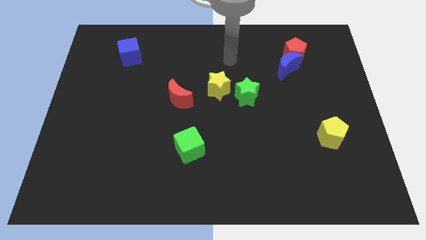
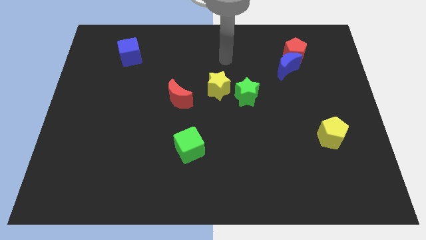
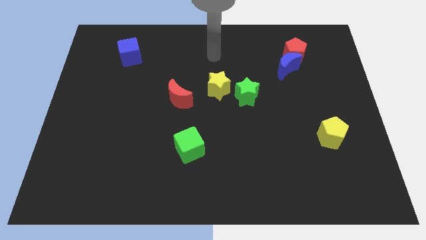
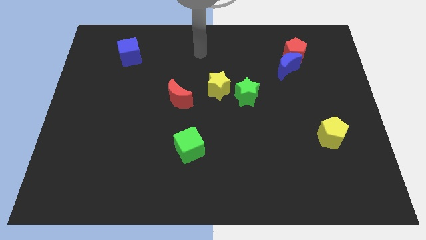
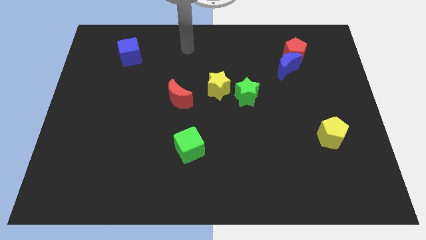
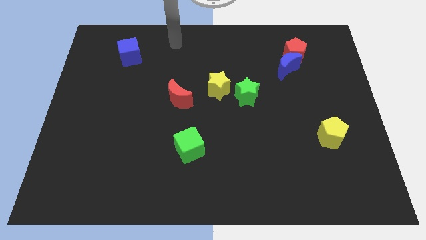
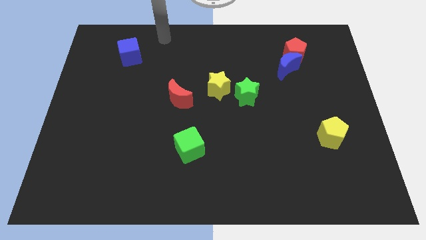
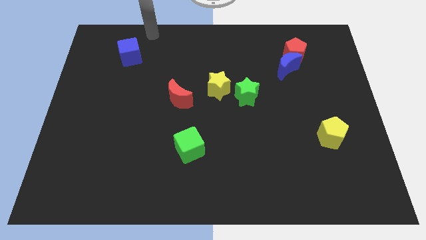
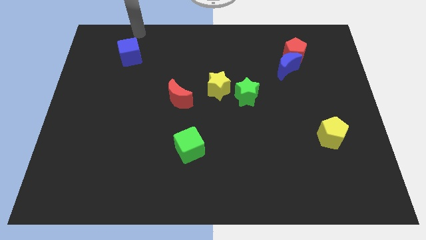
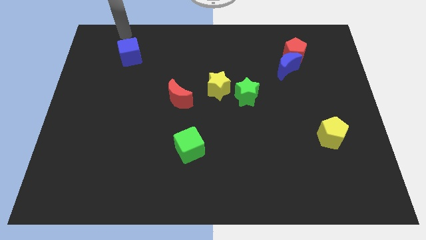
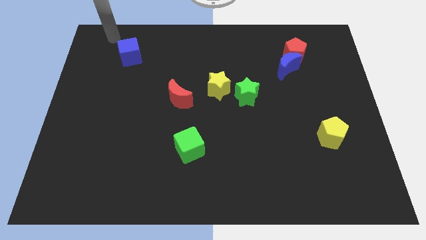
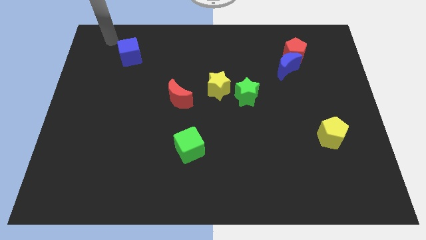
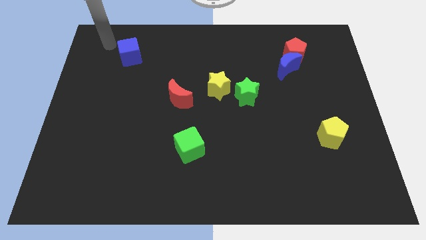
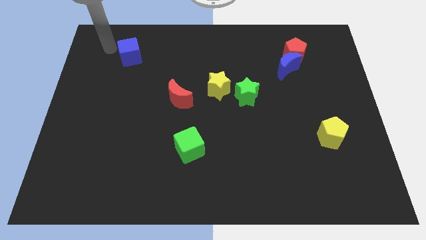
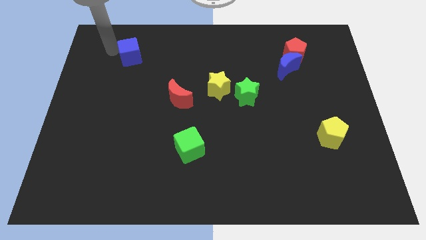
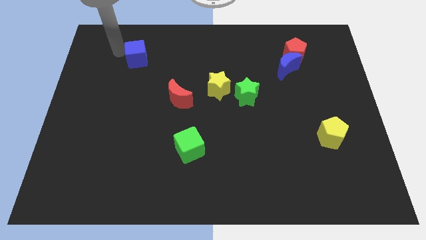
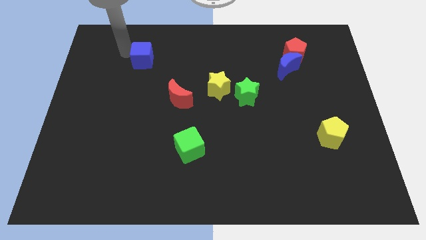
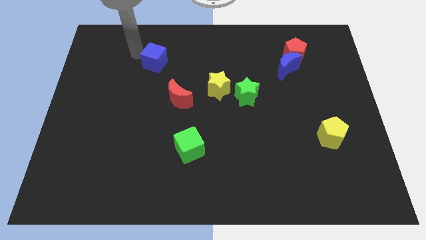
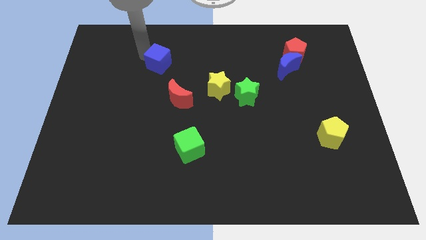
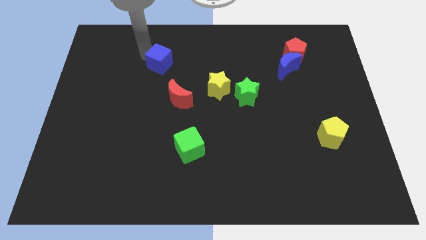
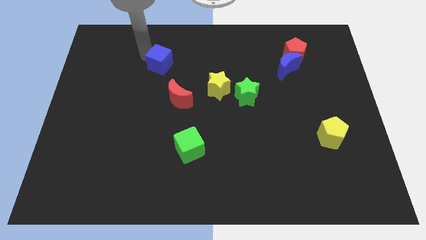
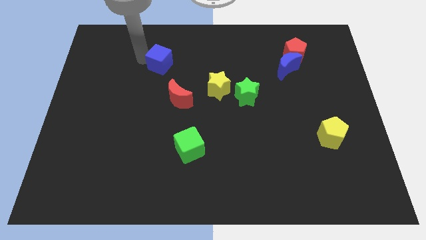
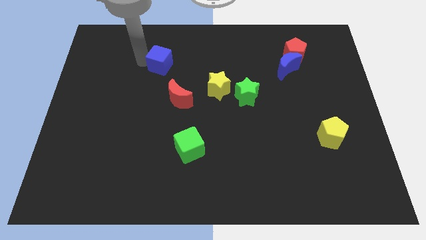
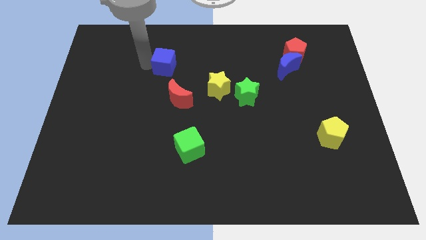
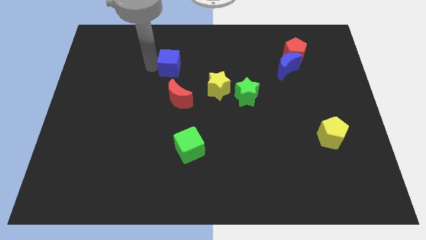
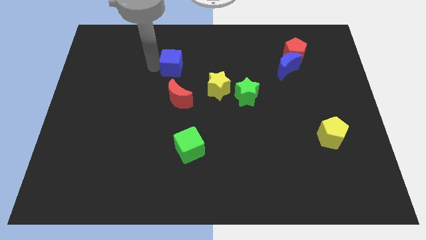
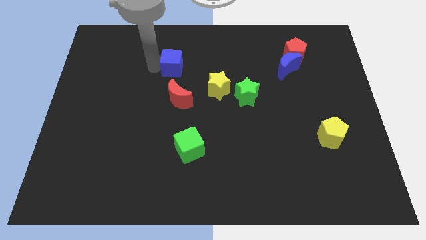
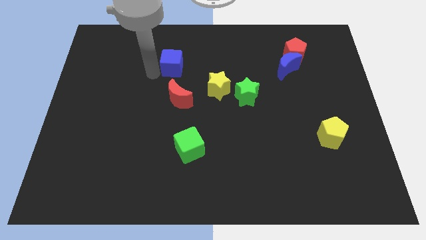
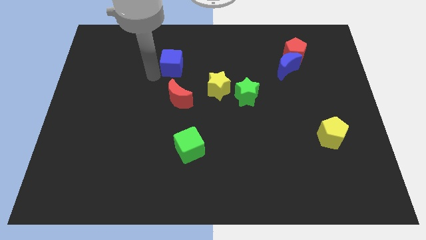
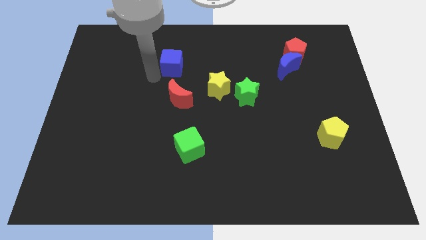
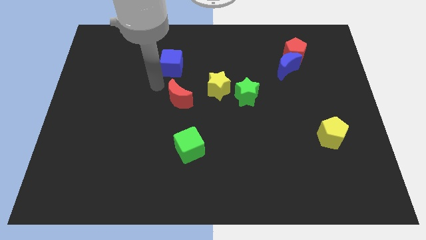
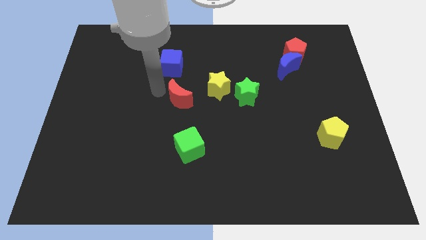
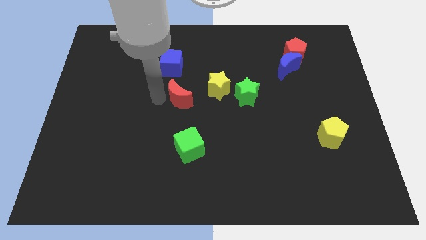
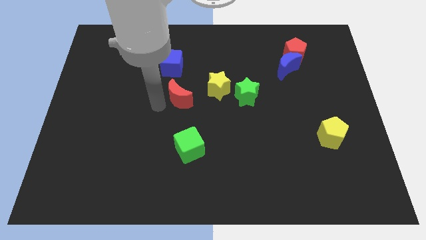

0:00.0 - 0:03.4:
place the blue cube above the red crescent

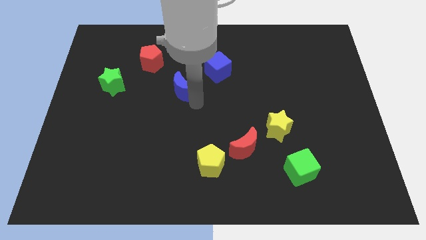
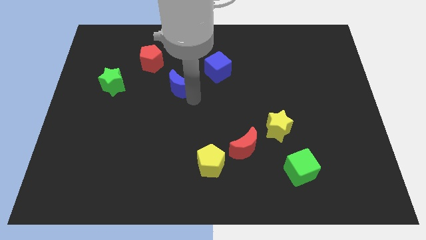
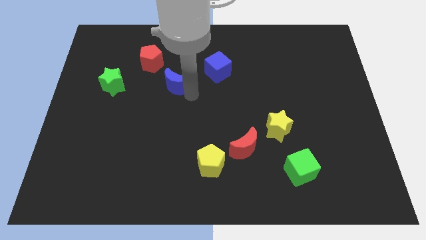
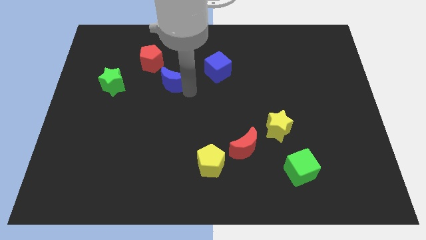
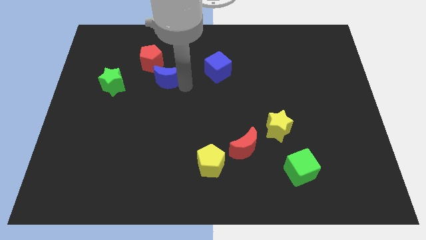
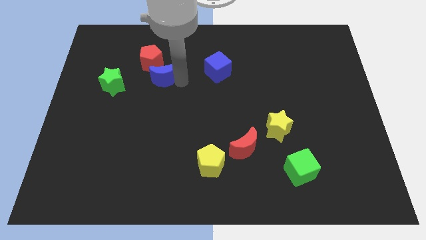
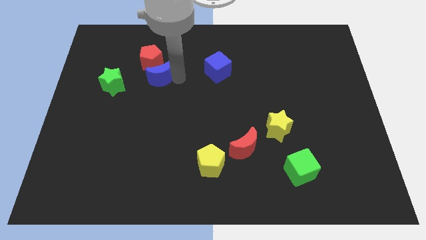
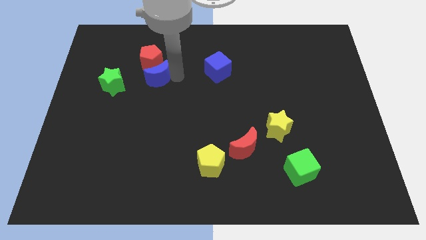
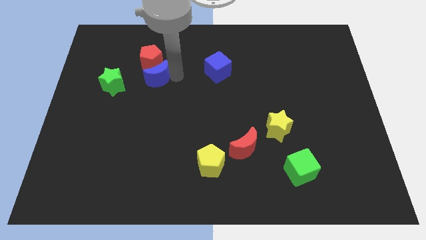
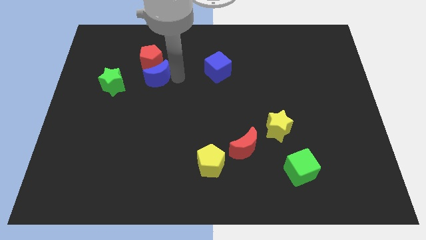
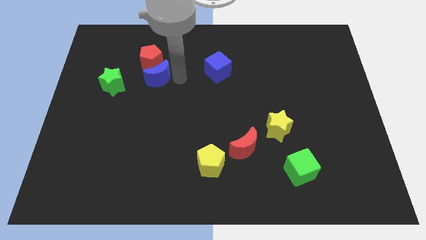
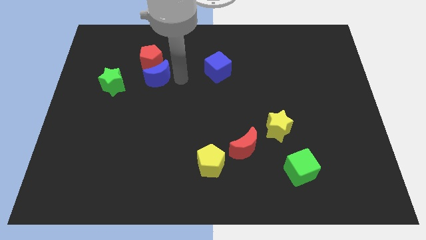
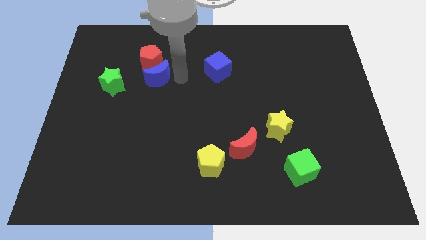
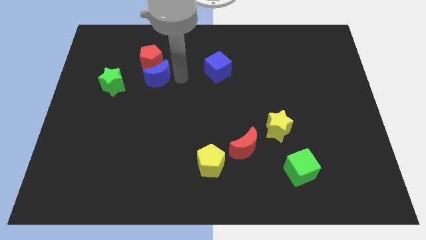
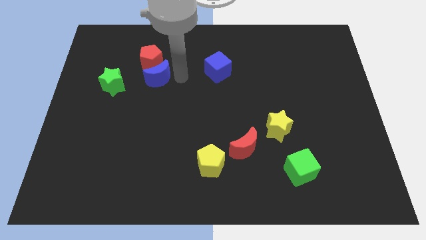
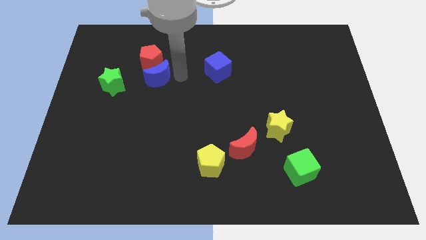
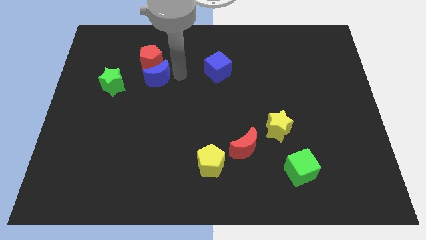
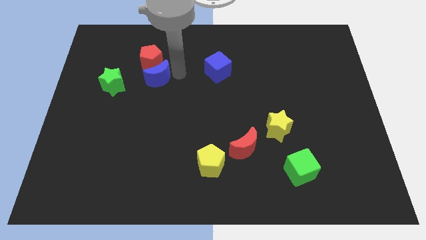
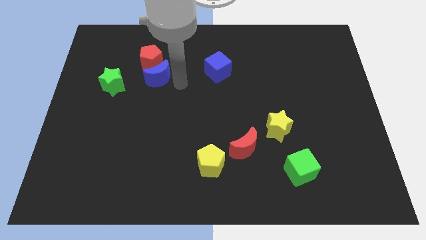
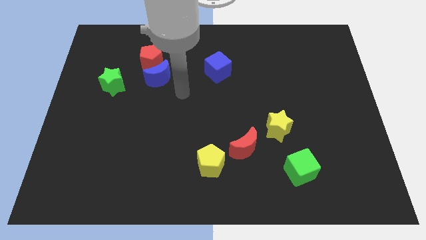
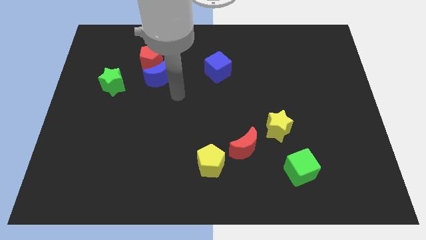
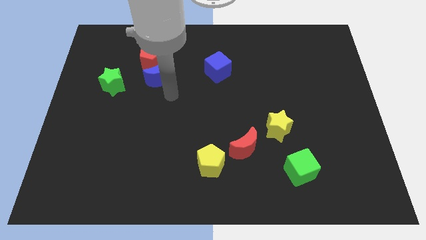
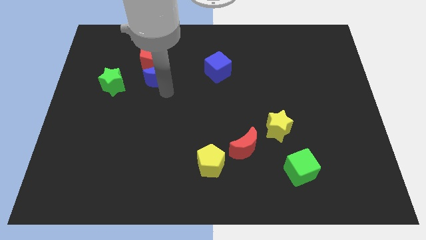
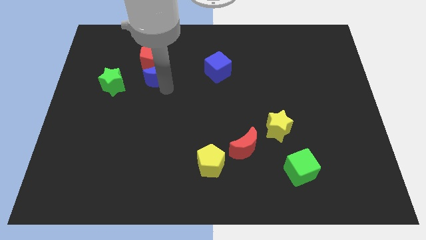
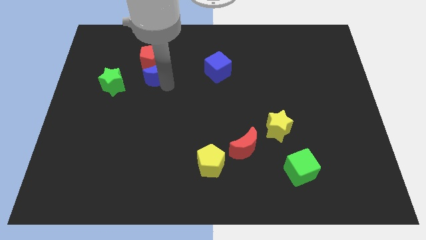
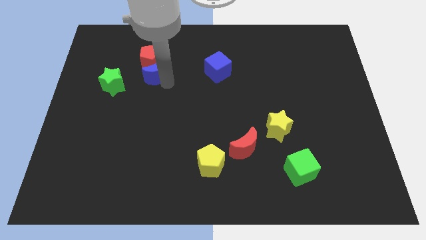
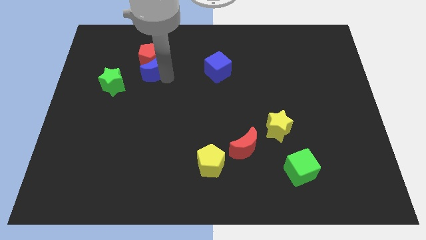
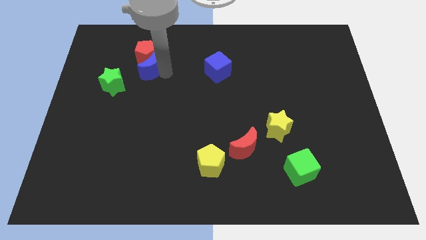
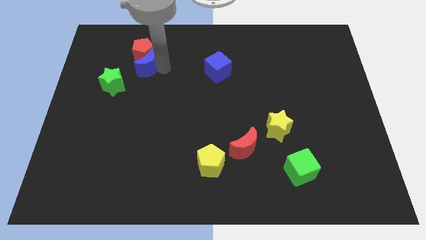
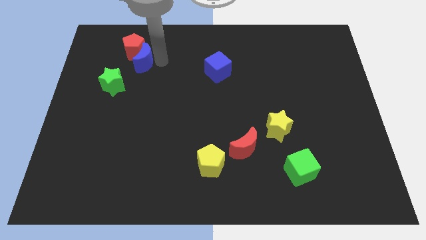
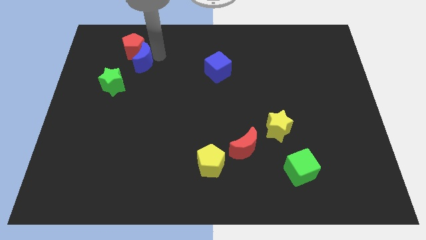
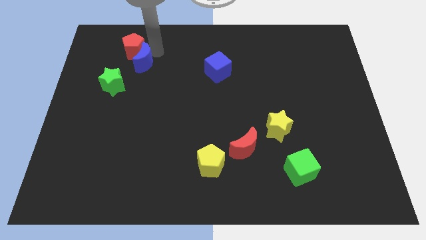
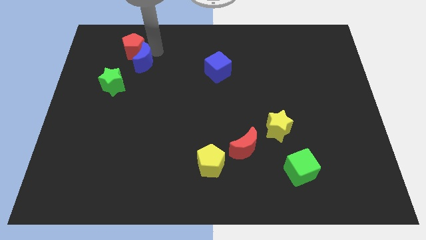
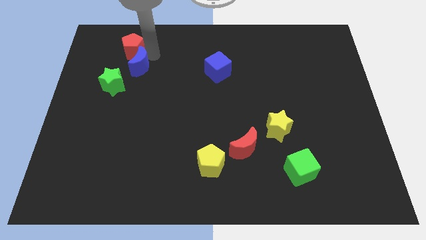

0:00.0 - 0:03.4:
push the blue moon into the red pentagon

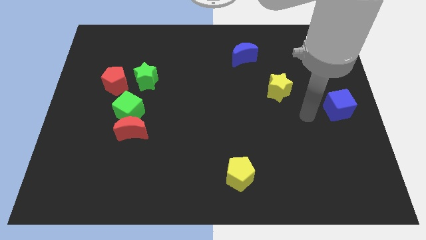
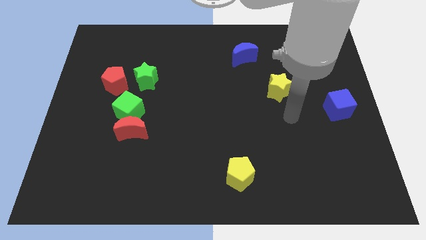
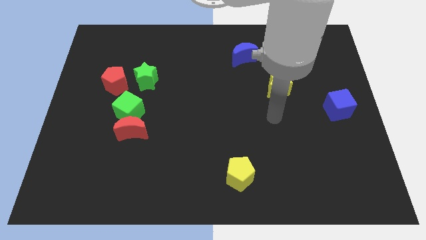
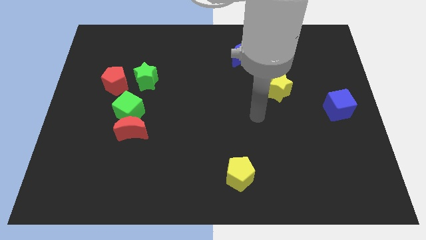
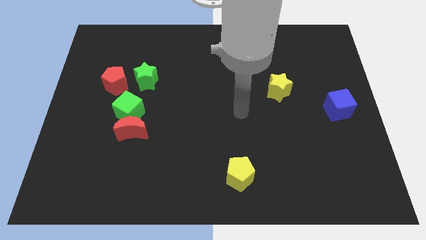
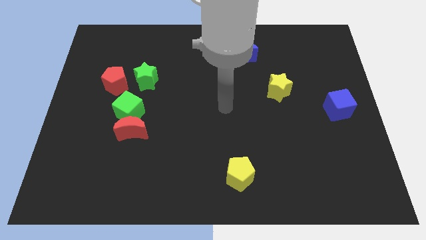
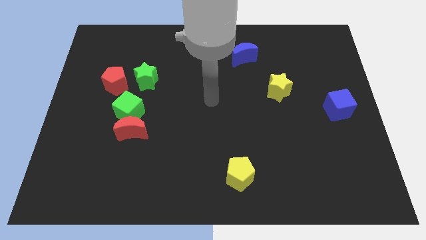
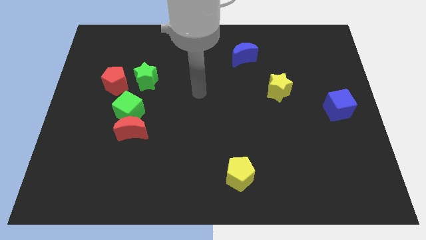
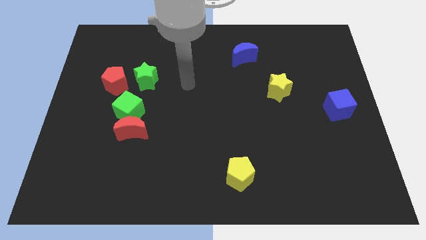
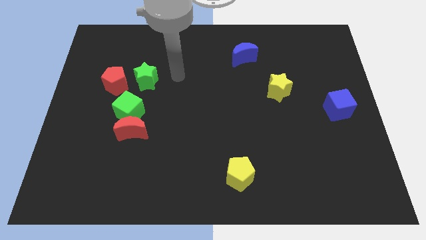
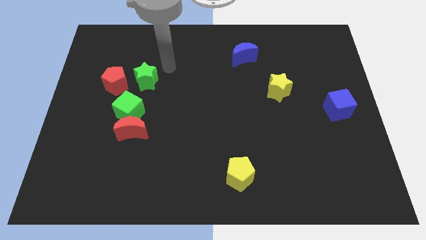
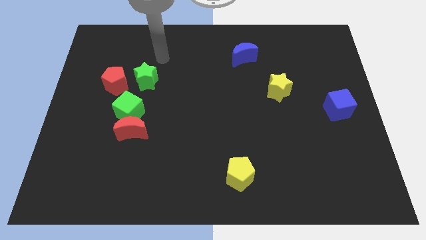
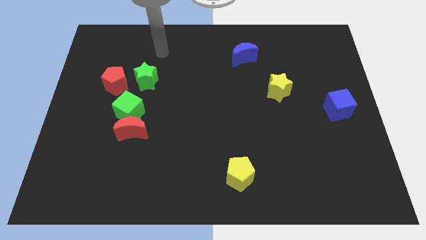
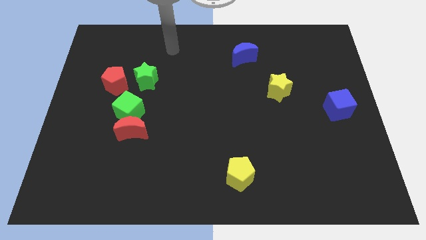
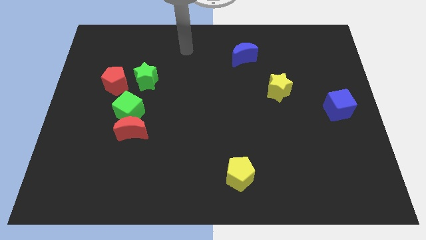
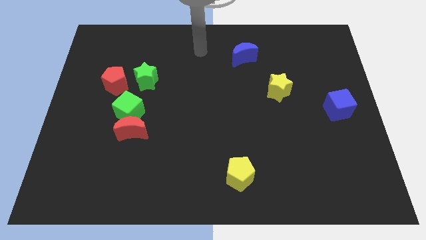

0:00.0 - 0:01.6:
move towards the top center of the board

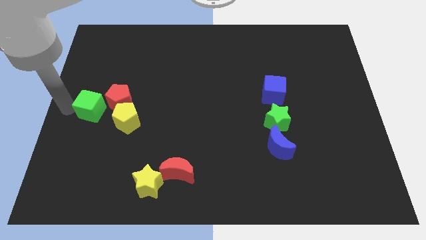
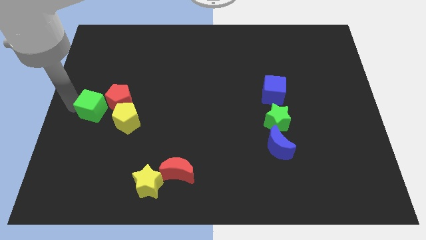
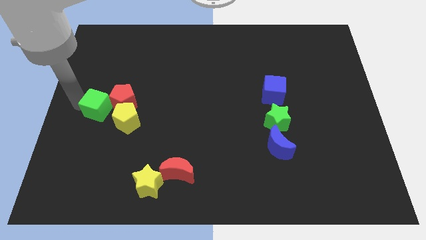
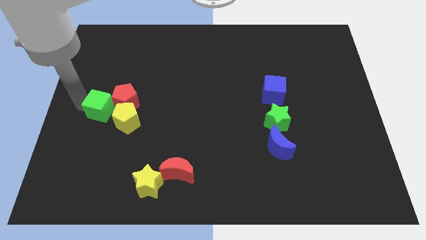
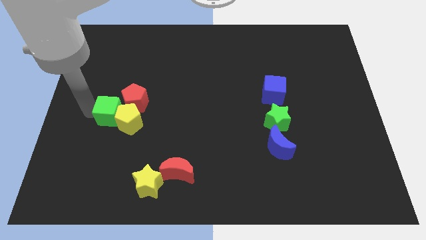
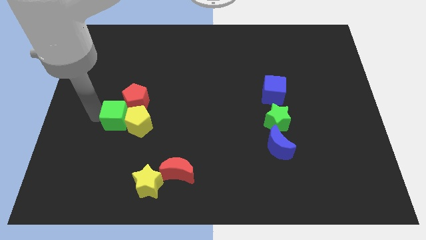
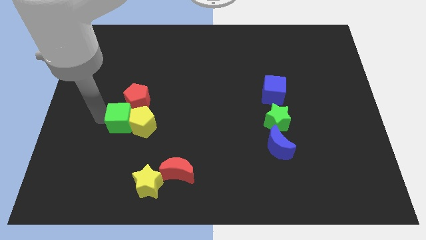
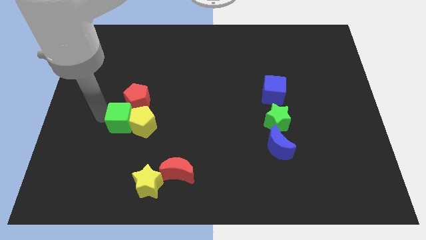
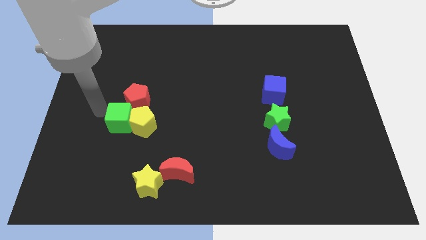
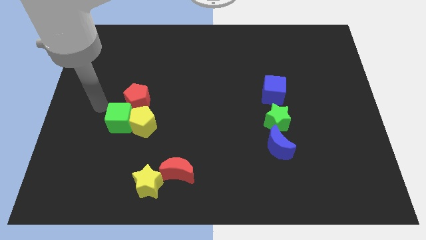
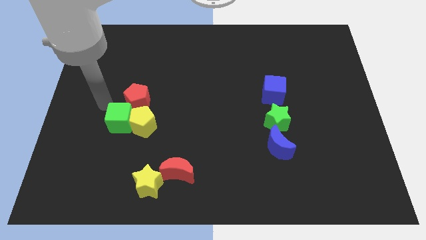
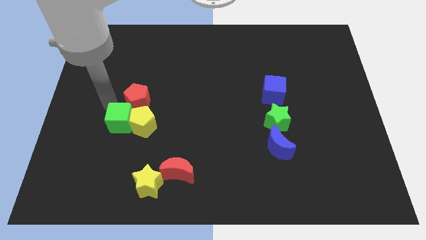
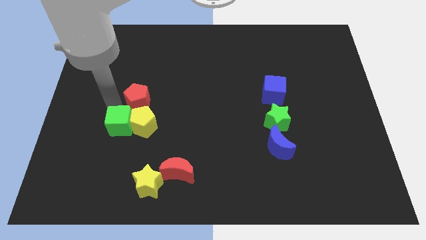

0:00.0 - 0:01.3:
push the green cube to the left of the yellow pentagon
